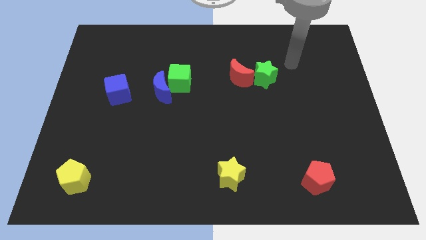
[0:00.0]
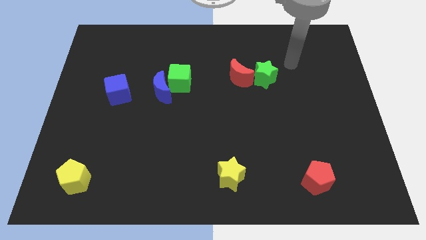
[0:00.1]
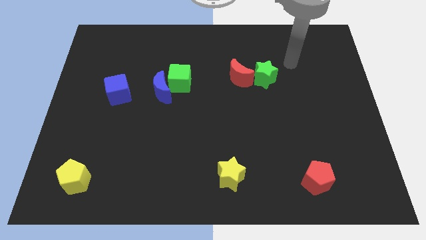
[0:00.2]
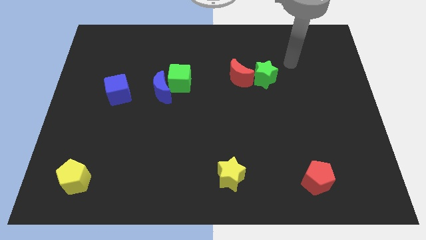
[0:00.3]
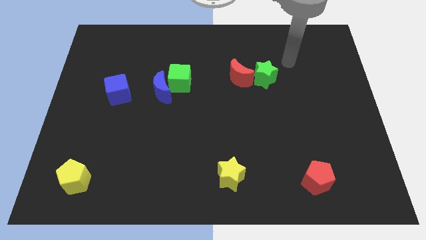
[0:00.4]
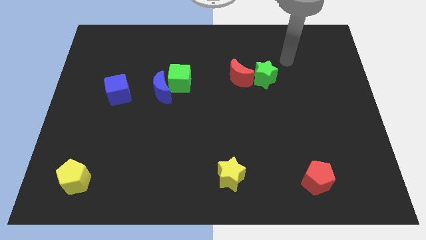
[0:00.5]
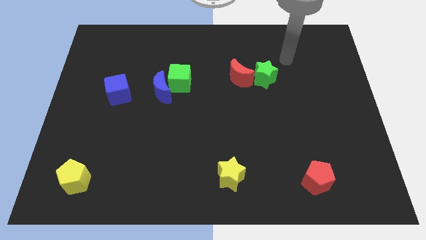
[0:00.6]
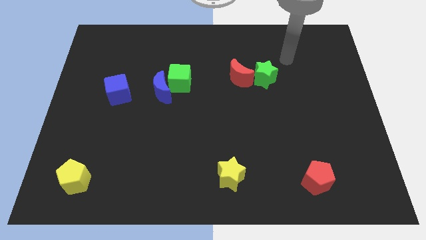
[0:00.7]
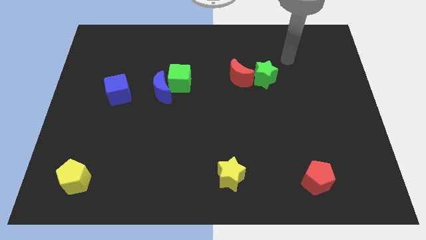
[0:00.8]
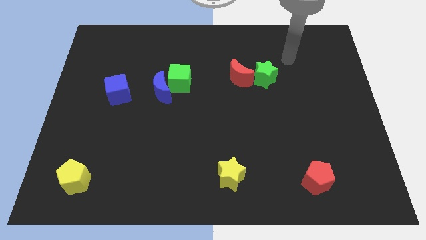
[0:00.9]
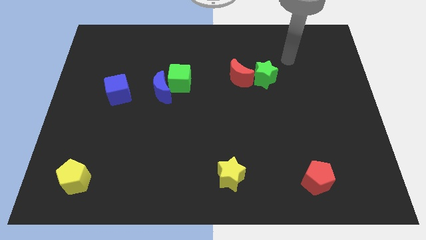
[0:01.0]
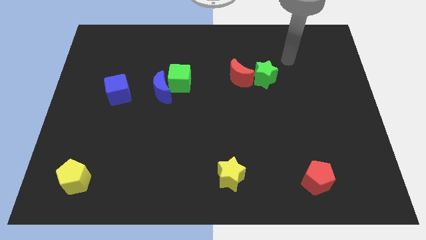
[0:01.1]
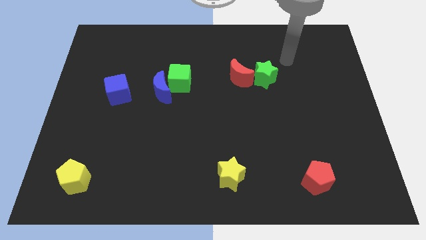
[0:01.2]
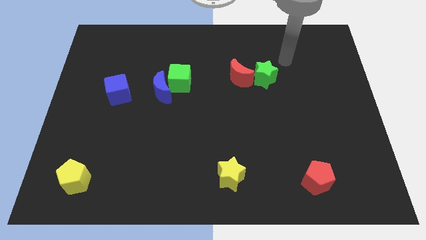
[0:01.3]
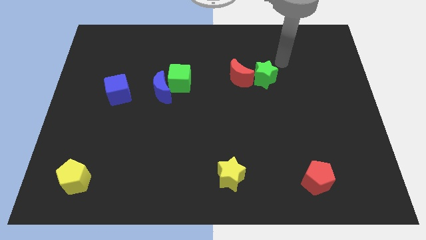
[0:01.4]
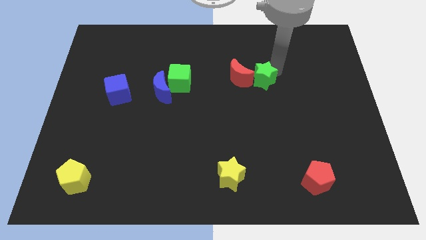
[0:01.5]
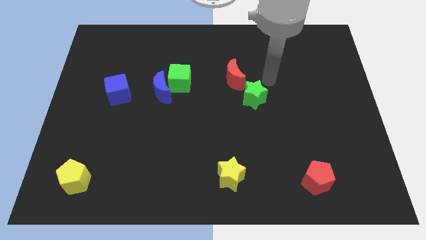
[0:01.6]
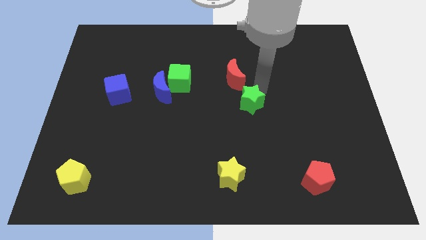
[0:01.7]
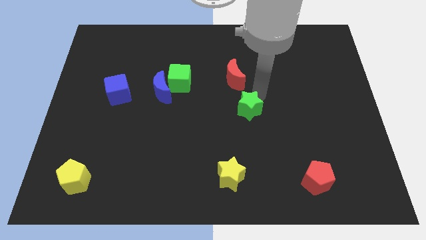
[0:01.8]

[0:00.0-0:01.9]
move green star slightly down

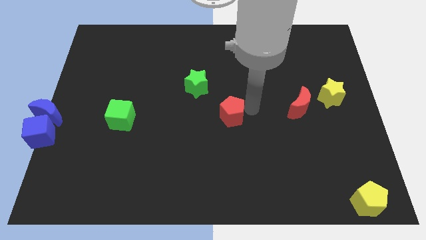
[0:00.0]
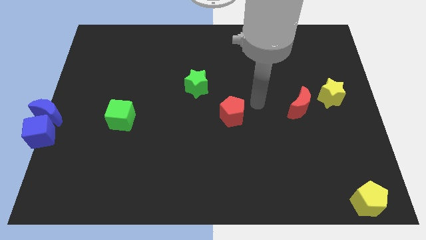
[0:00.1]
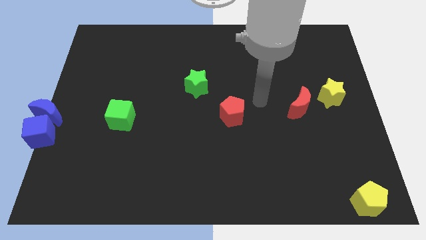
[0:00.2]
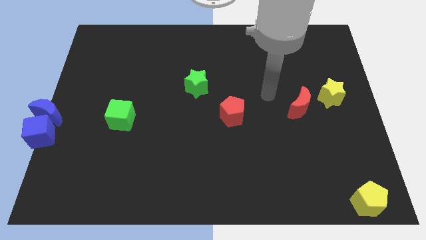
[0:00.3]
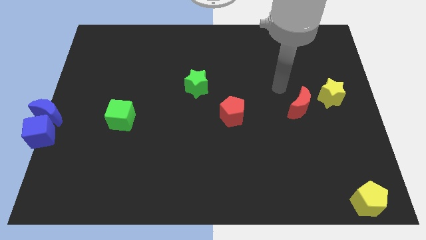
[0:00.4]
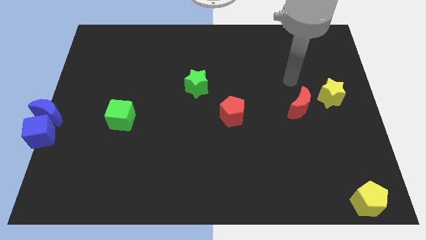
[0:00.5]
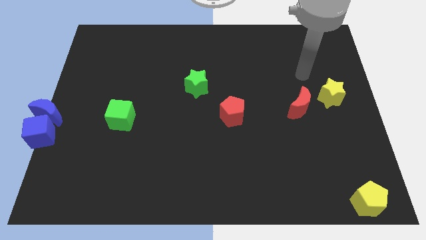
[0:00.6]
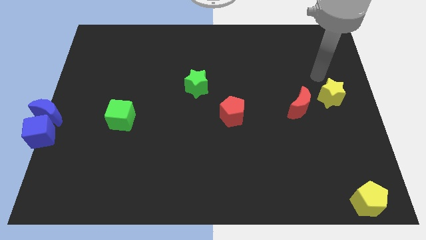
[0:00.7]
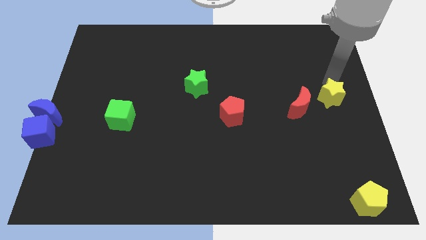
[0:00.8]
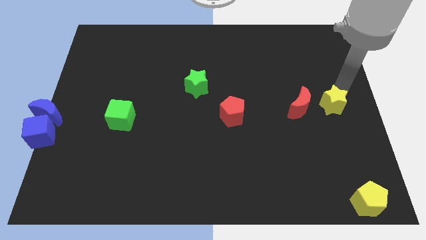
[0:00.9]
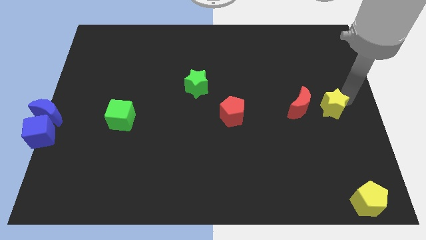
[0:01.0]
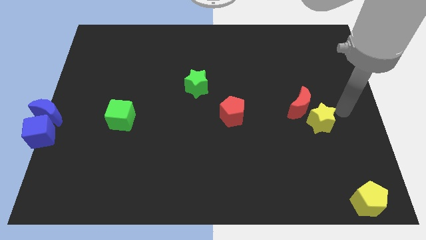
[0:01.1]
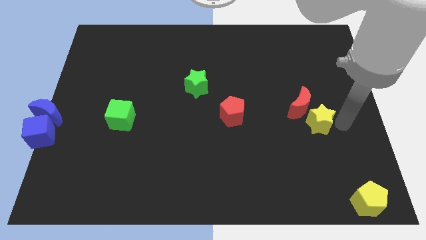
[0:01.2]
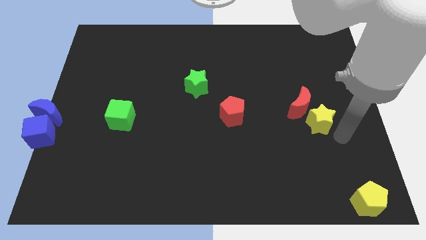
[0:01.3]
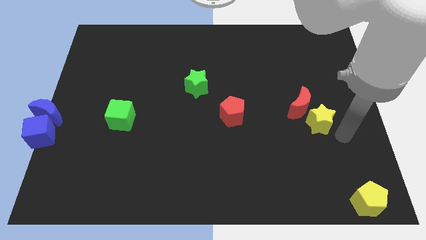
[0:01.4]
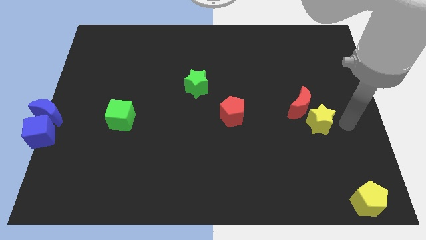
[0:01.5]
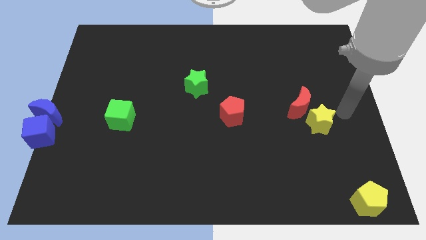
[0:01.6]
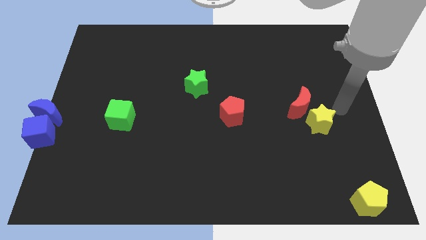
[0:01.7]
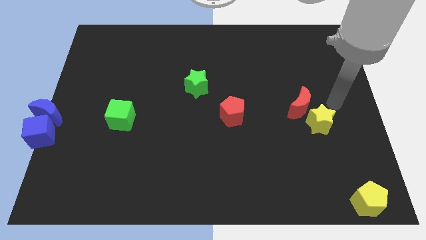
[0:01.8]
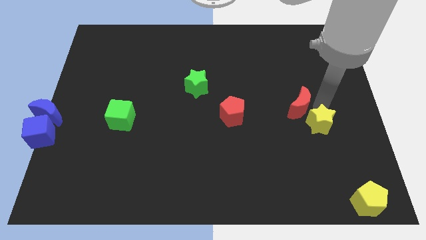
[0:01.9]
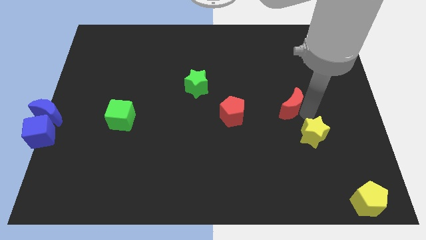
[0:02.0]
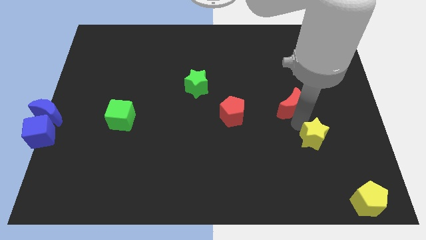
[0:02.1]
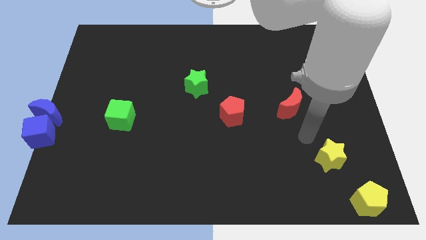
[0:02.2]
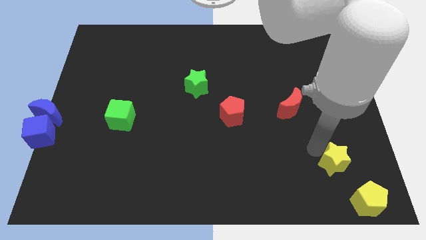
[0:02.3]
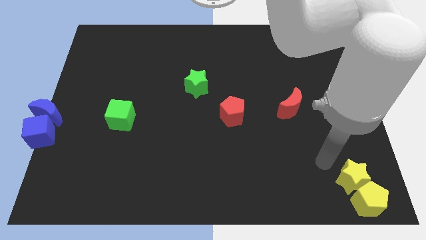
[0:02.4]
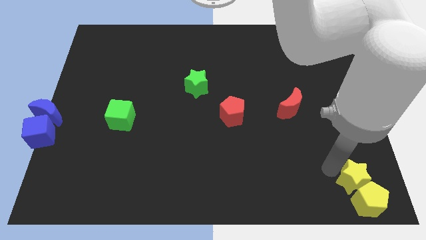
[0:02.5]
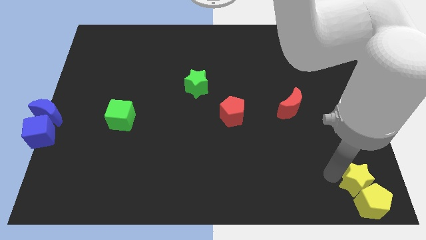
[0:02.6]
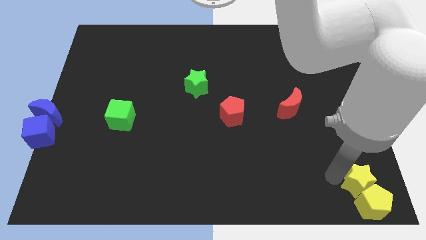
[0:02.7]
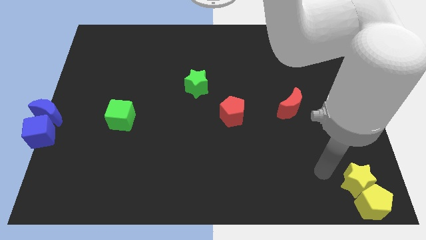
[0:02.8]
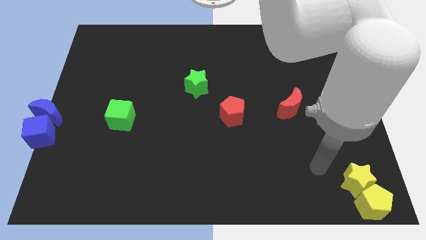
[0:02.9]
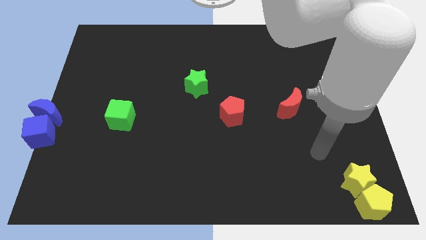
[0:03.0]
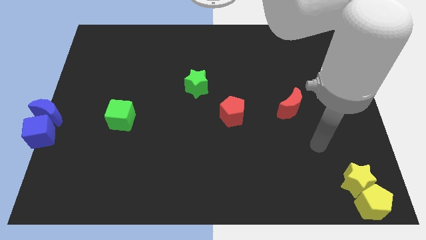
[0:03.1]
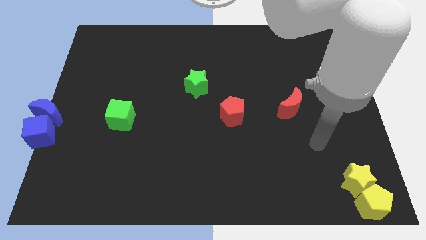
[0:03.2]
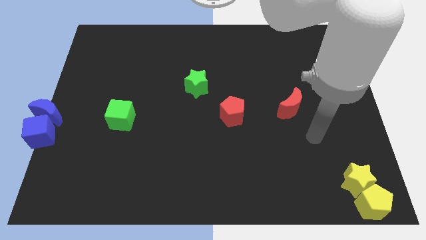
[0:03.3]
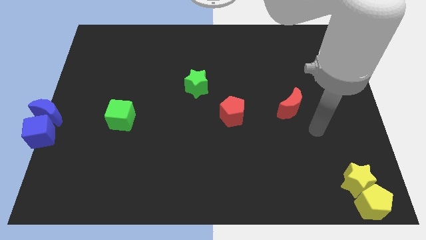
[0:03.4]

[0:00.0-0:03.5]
push the yellow star above the yellow pentagon

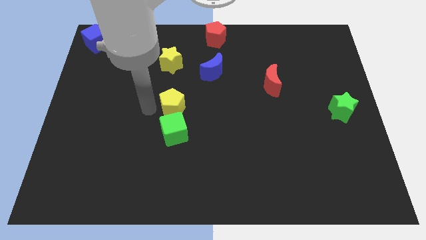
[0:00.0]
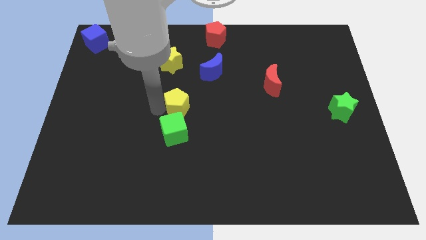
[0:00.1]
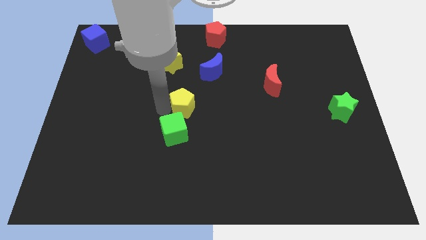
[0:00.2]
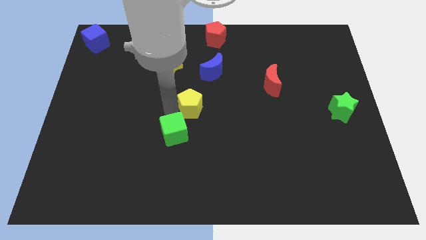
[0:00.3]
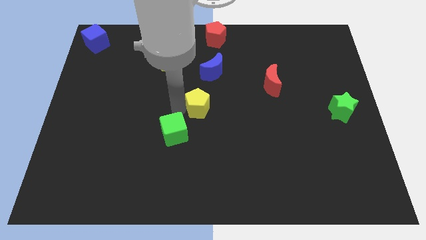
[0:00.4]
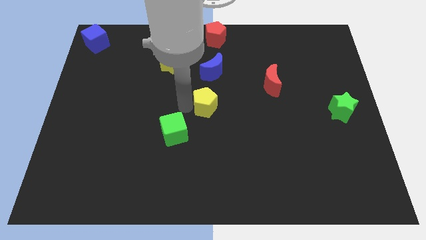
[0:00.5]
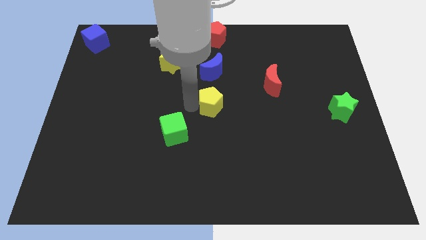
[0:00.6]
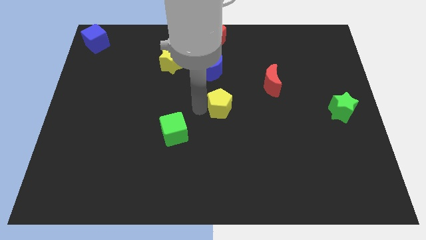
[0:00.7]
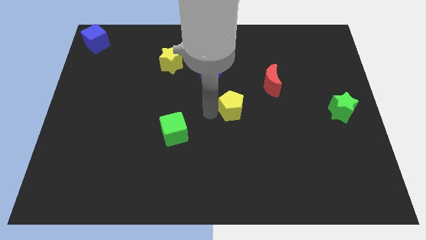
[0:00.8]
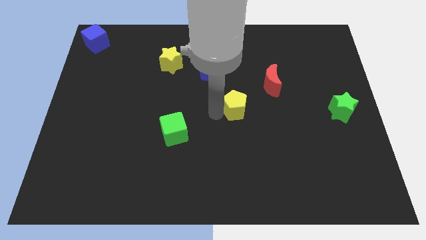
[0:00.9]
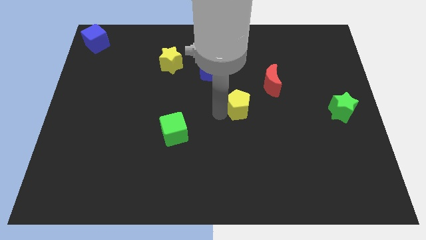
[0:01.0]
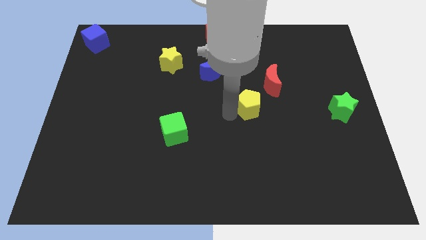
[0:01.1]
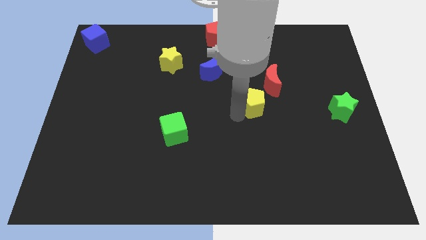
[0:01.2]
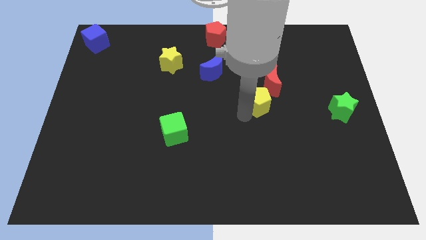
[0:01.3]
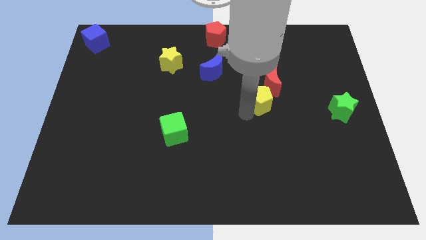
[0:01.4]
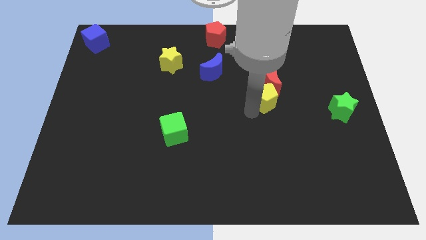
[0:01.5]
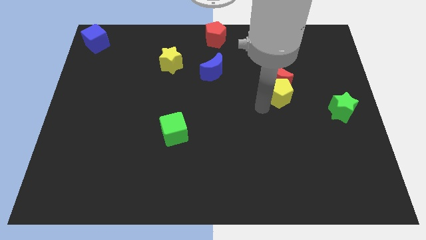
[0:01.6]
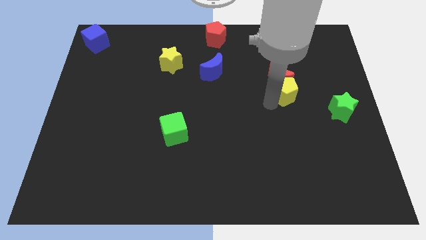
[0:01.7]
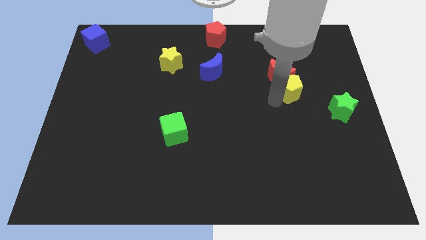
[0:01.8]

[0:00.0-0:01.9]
move the yellow pentagon below the red moon

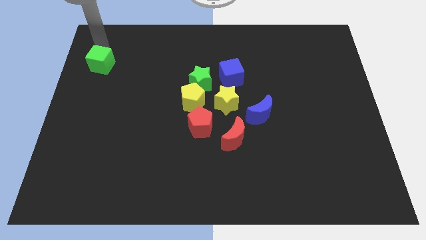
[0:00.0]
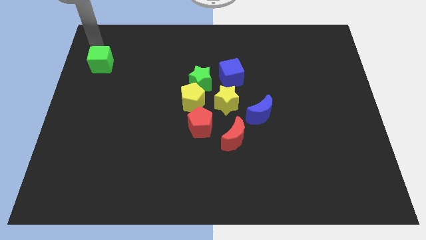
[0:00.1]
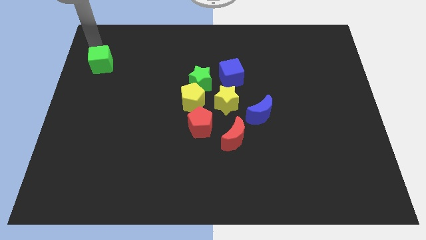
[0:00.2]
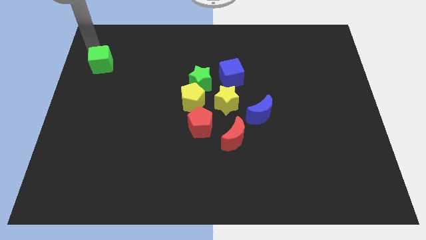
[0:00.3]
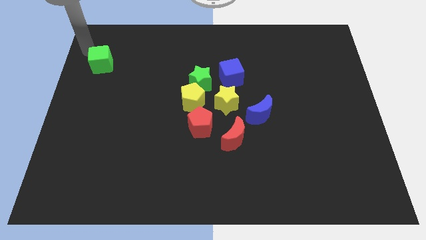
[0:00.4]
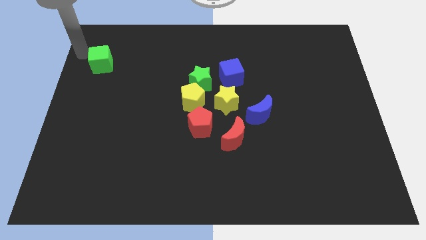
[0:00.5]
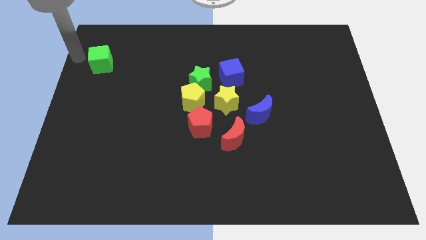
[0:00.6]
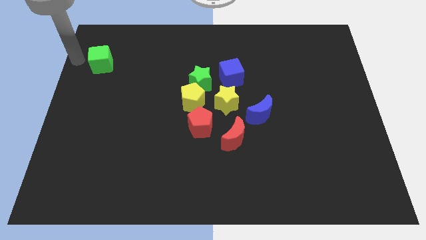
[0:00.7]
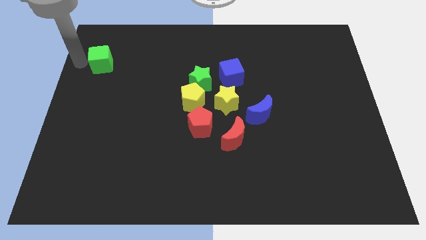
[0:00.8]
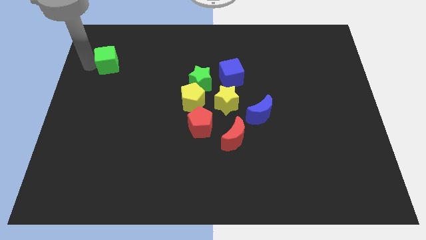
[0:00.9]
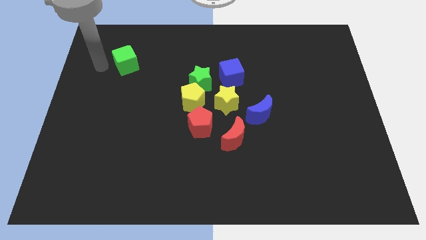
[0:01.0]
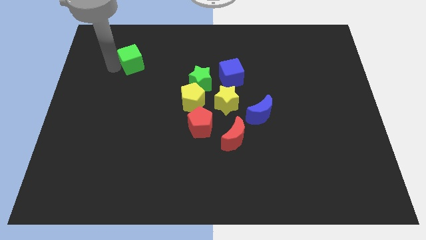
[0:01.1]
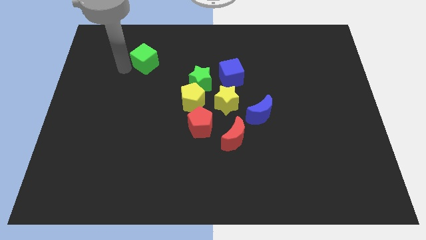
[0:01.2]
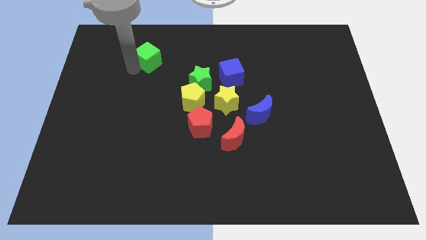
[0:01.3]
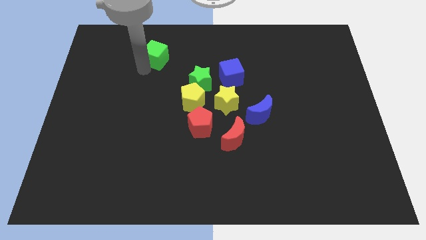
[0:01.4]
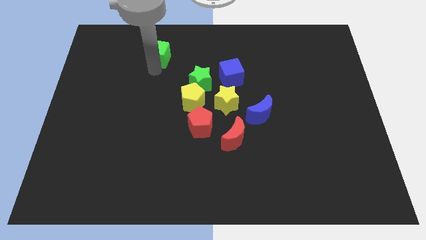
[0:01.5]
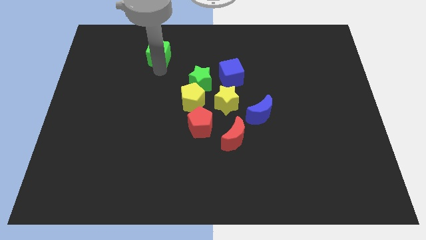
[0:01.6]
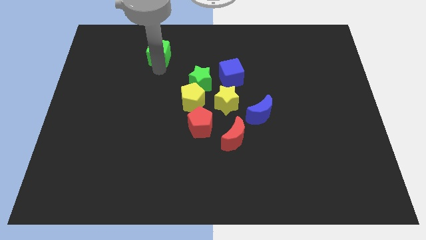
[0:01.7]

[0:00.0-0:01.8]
move the green cube to the right of the board
